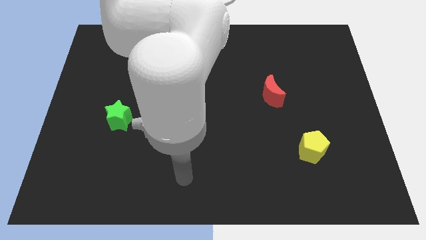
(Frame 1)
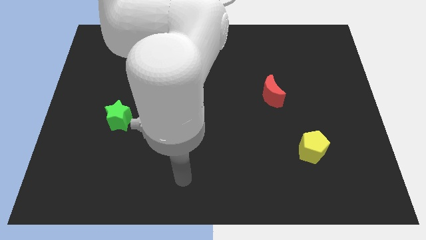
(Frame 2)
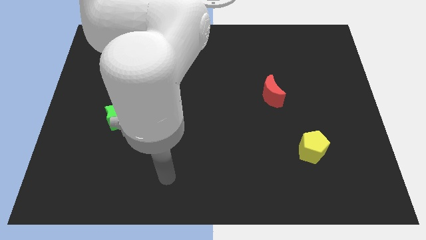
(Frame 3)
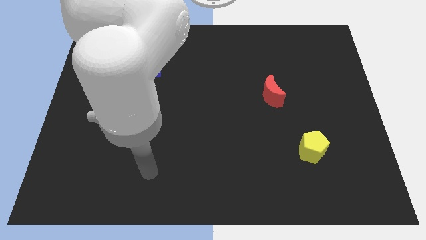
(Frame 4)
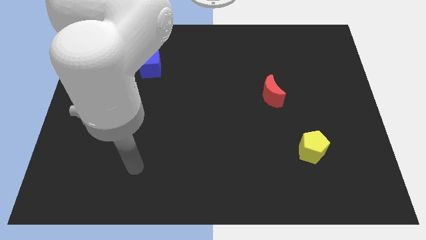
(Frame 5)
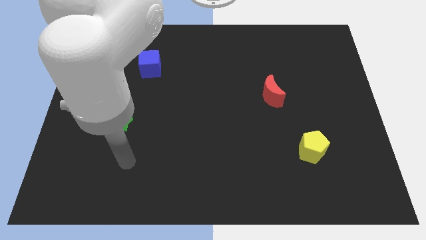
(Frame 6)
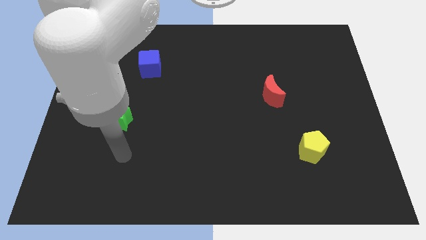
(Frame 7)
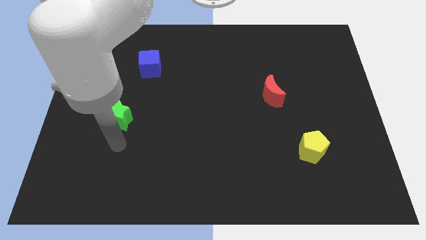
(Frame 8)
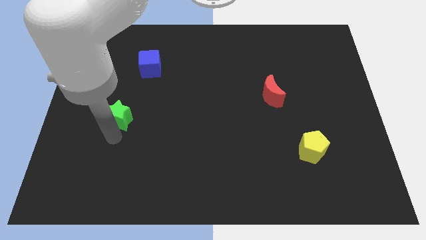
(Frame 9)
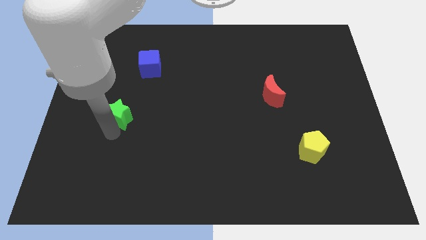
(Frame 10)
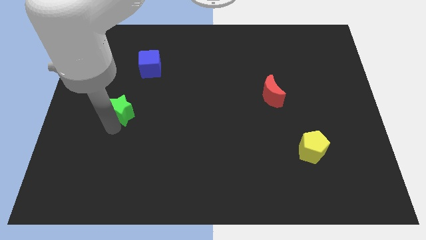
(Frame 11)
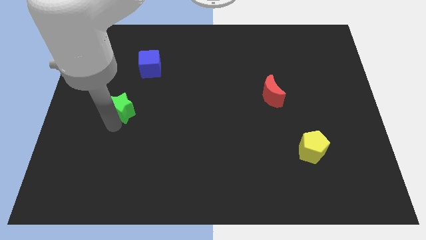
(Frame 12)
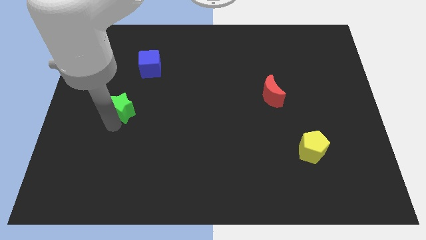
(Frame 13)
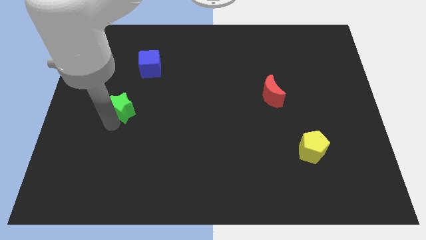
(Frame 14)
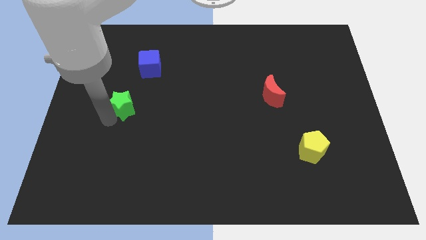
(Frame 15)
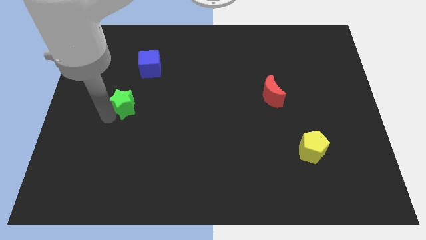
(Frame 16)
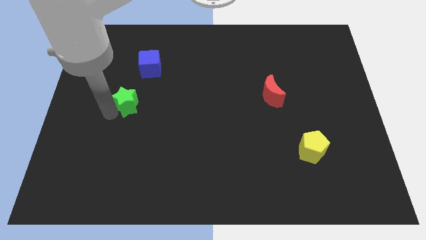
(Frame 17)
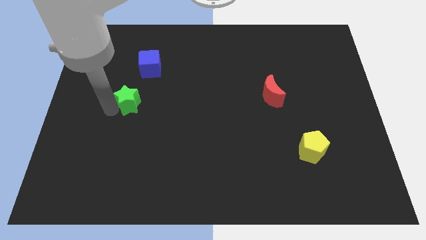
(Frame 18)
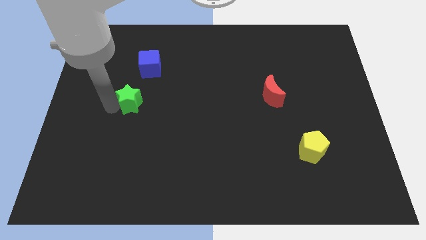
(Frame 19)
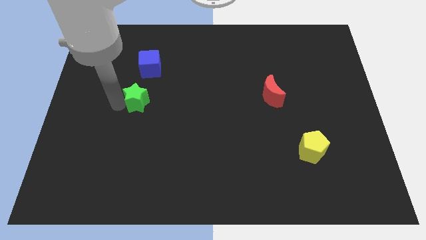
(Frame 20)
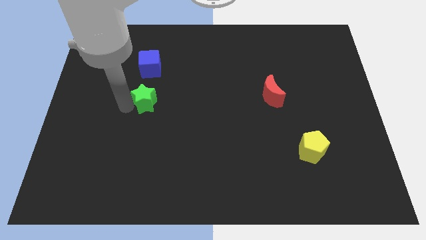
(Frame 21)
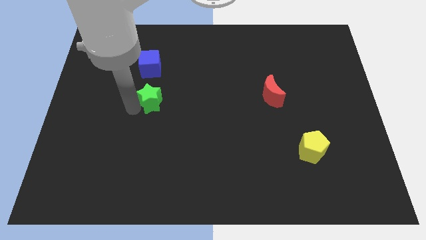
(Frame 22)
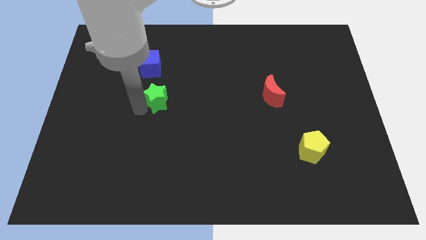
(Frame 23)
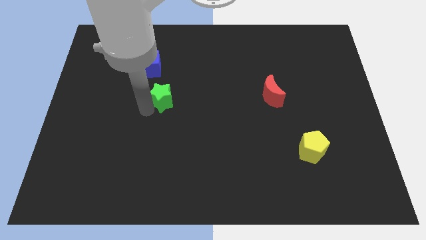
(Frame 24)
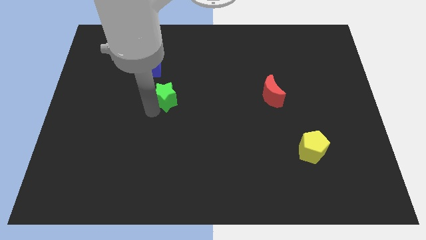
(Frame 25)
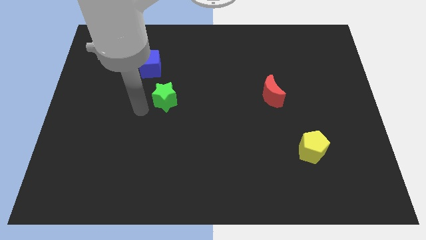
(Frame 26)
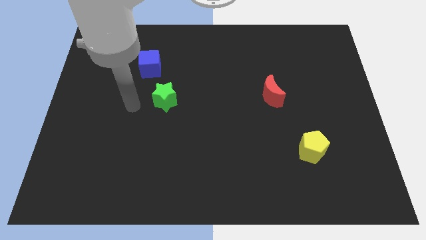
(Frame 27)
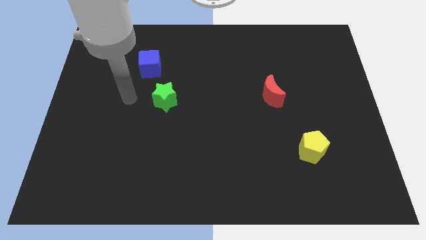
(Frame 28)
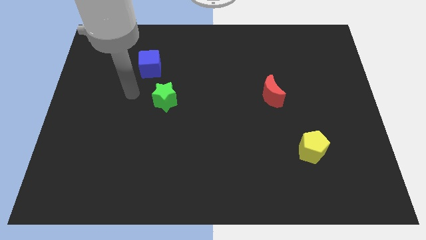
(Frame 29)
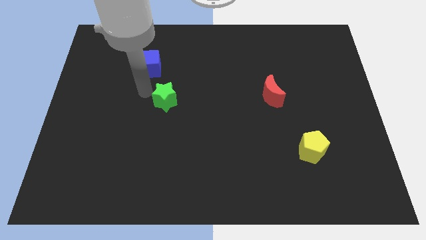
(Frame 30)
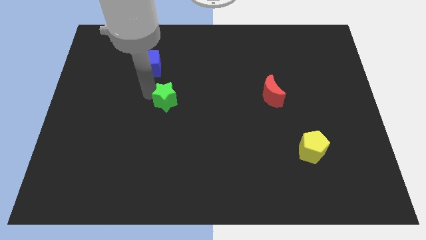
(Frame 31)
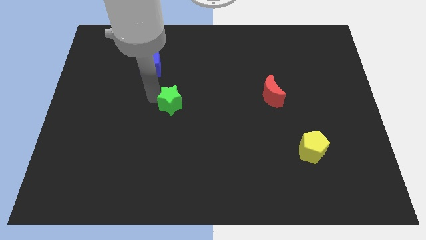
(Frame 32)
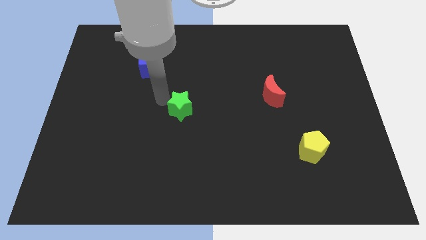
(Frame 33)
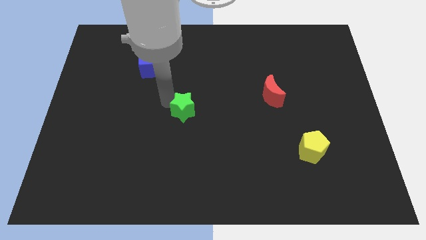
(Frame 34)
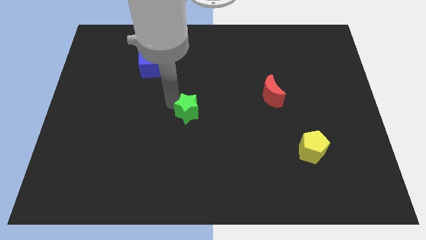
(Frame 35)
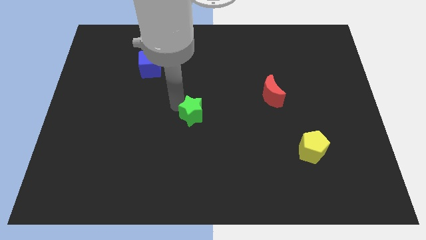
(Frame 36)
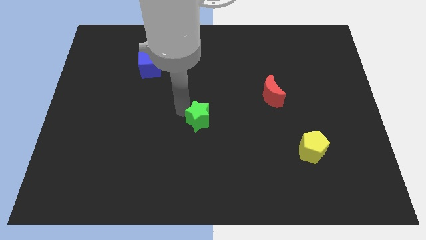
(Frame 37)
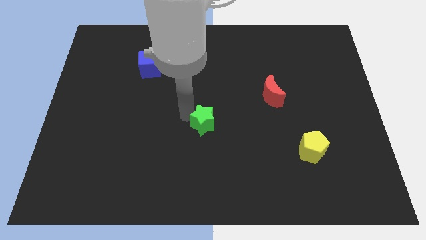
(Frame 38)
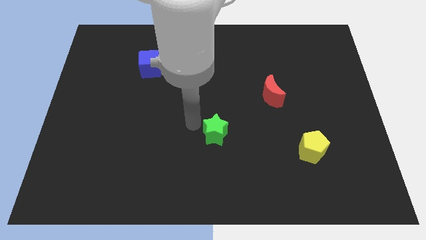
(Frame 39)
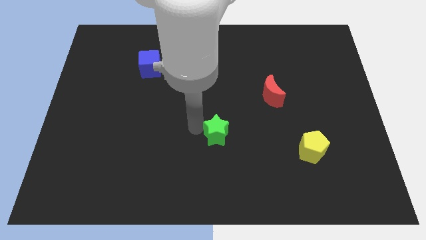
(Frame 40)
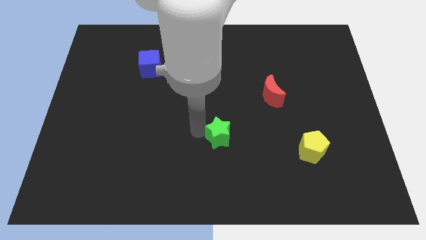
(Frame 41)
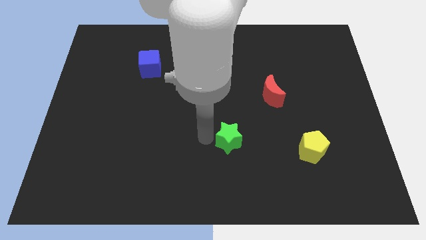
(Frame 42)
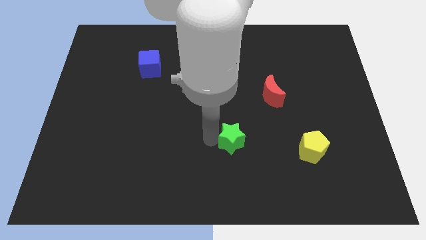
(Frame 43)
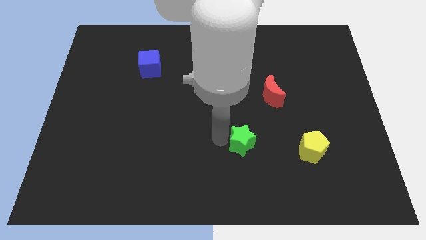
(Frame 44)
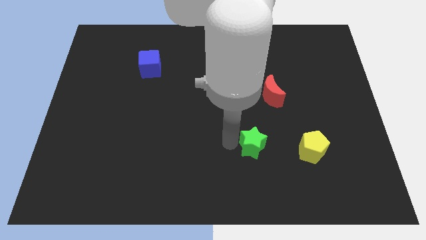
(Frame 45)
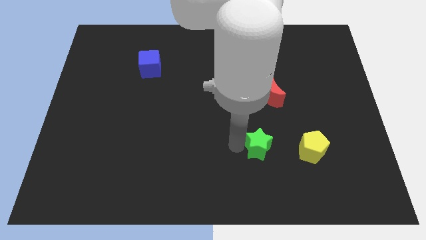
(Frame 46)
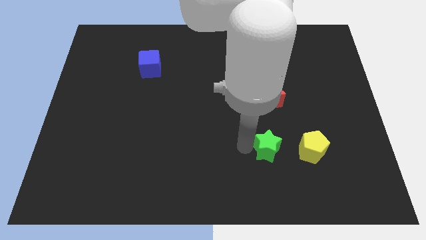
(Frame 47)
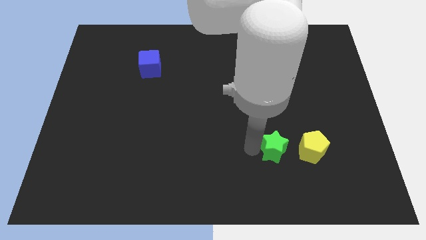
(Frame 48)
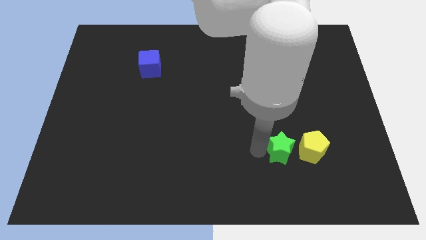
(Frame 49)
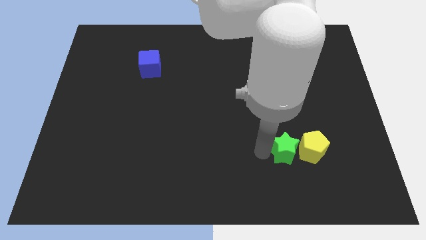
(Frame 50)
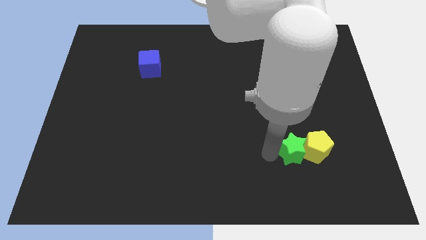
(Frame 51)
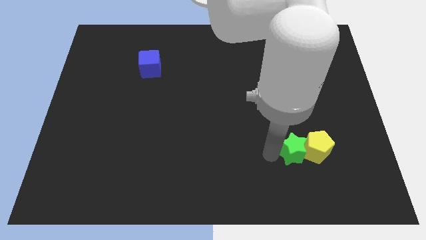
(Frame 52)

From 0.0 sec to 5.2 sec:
move the green block towards the pentagon

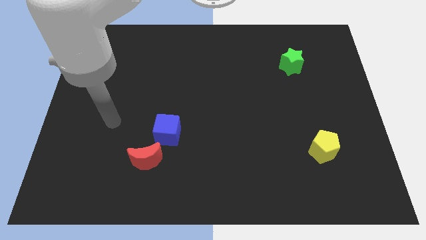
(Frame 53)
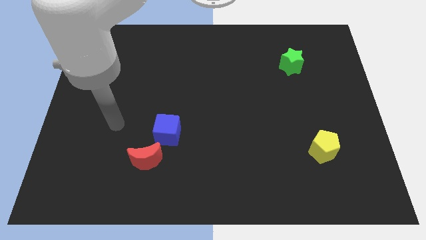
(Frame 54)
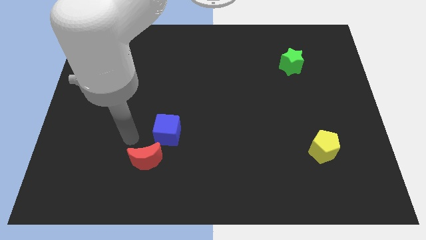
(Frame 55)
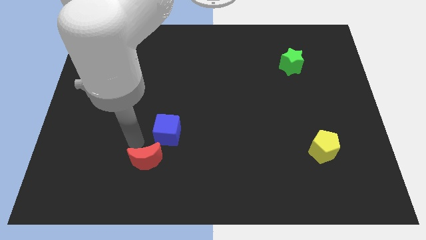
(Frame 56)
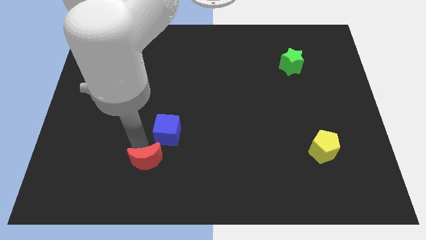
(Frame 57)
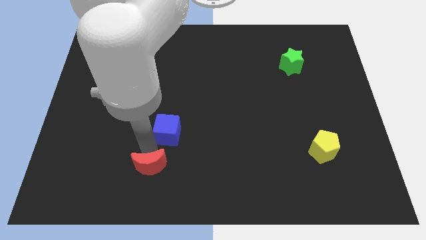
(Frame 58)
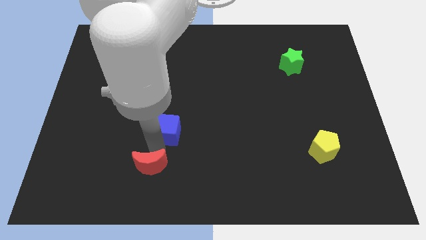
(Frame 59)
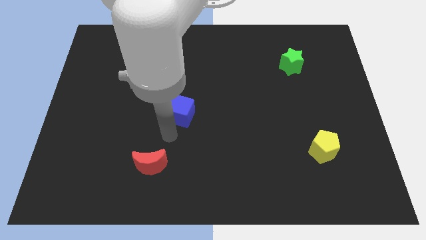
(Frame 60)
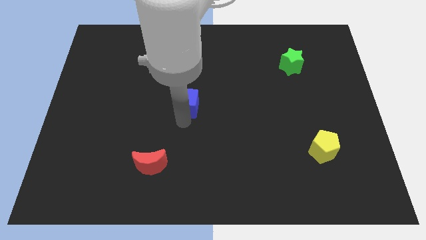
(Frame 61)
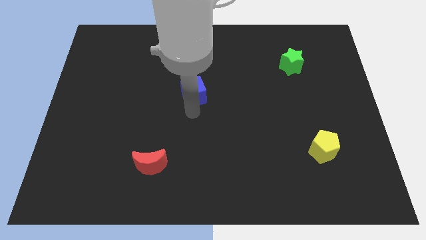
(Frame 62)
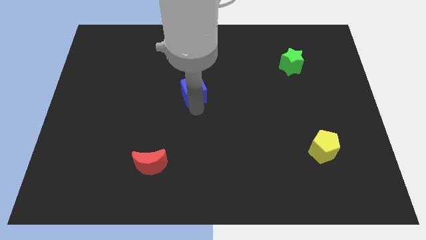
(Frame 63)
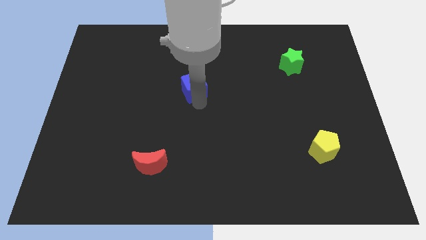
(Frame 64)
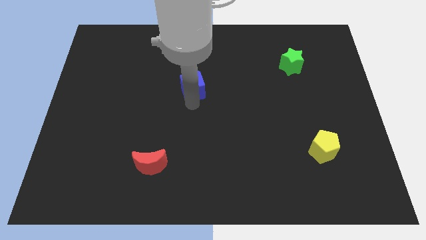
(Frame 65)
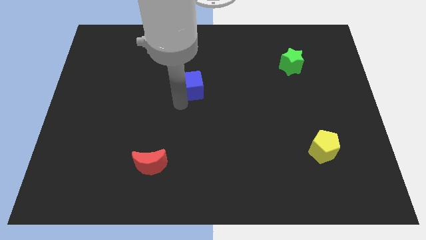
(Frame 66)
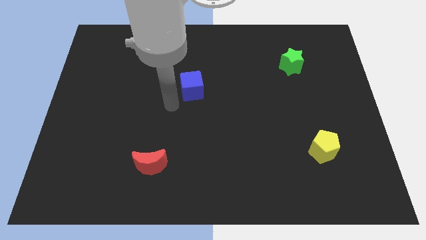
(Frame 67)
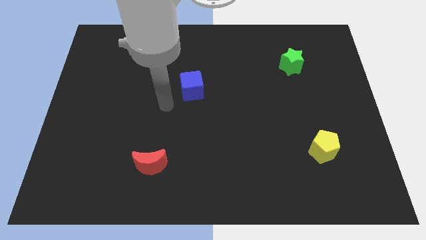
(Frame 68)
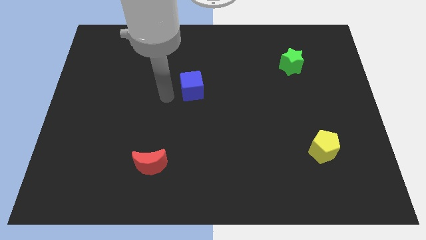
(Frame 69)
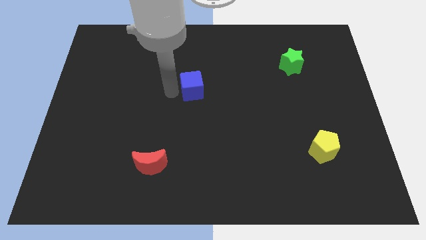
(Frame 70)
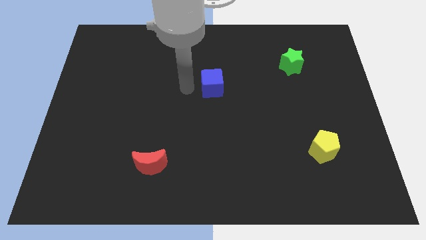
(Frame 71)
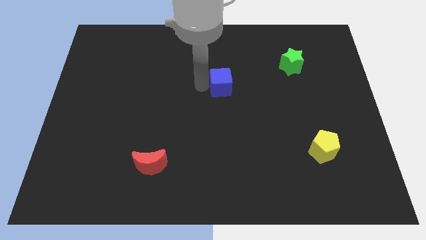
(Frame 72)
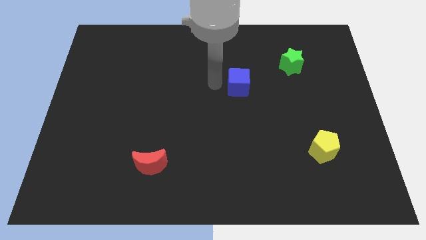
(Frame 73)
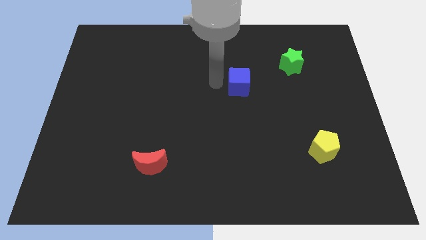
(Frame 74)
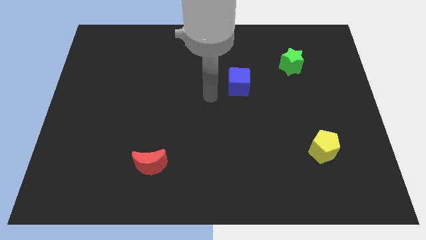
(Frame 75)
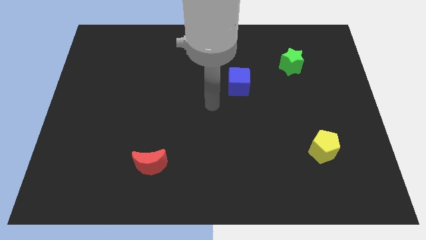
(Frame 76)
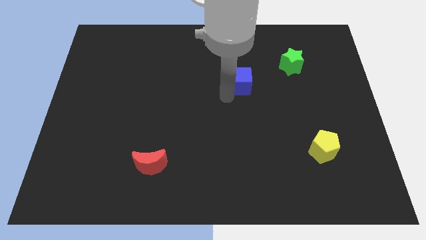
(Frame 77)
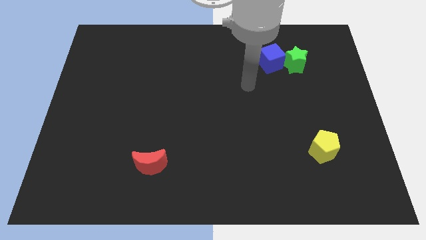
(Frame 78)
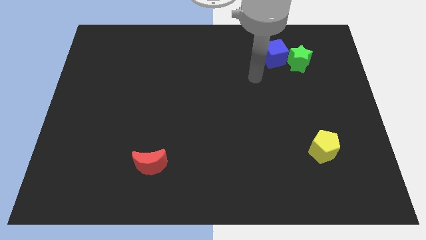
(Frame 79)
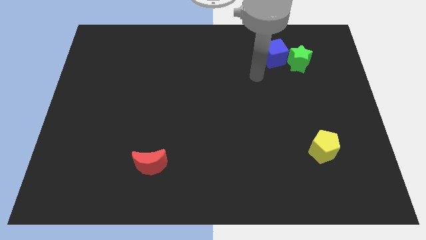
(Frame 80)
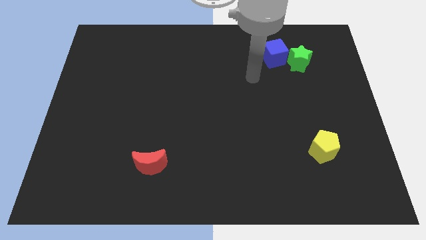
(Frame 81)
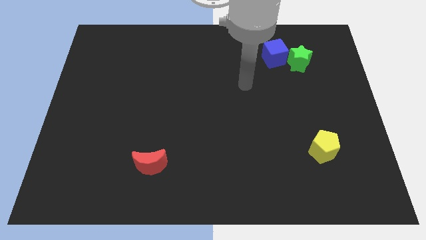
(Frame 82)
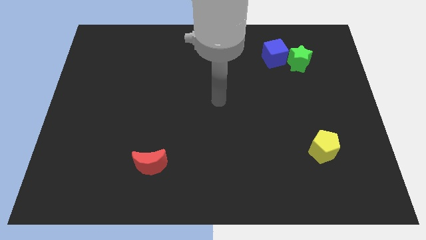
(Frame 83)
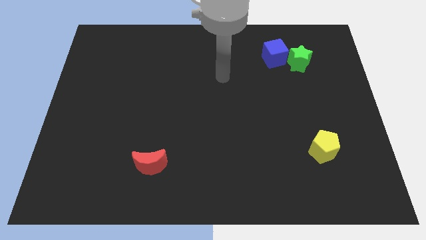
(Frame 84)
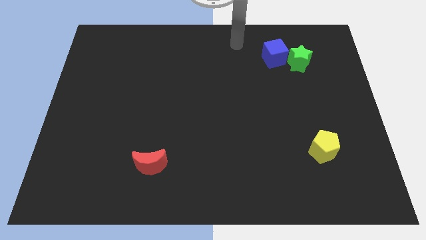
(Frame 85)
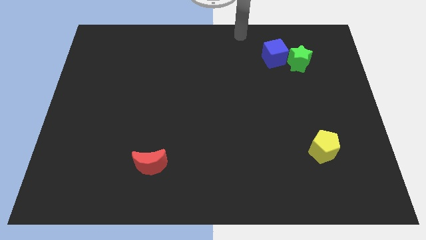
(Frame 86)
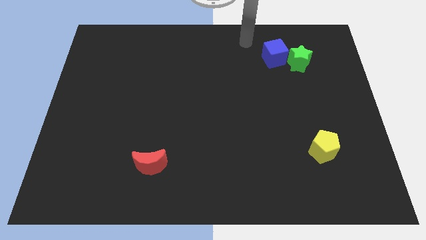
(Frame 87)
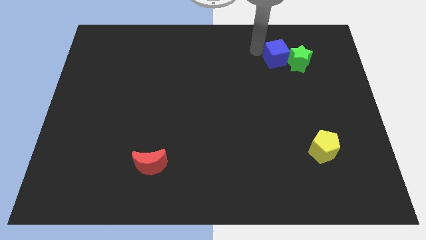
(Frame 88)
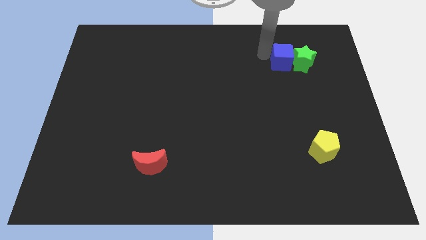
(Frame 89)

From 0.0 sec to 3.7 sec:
push the blue block next to the star
